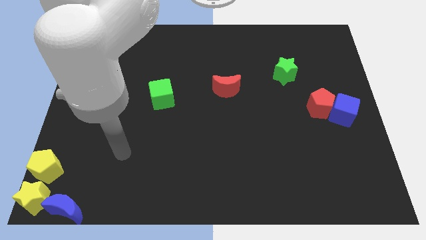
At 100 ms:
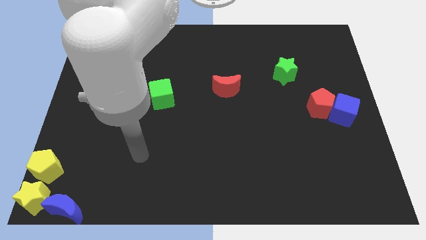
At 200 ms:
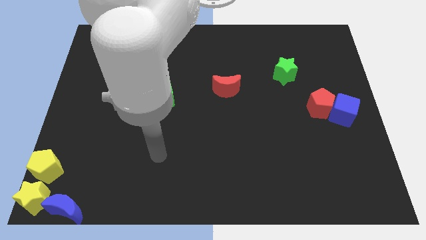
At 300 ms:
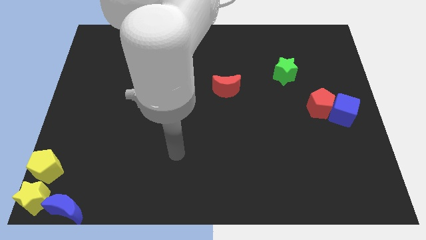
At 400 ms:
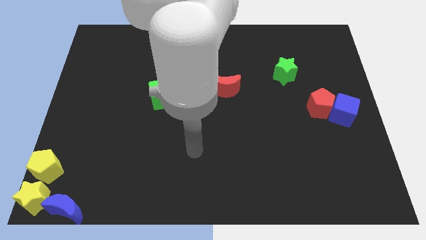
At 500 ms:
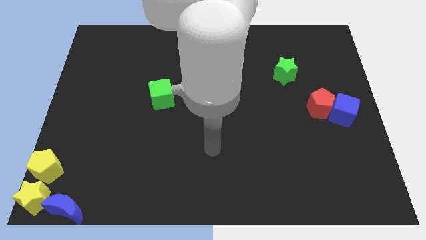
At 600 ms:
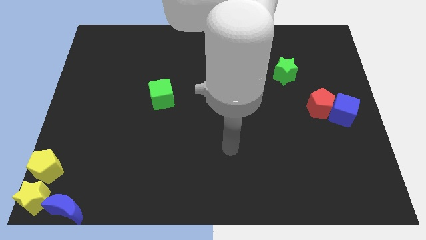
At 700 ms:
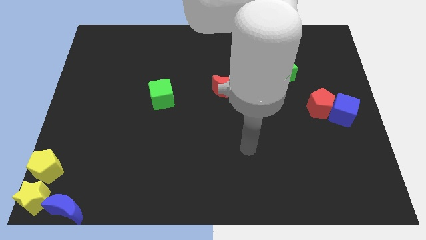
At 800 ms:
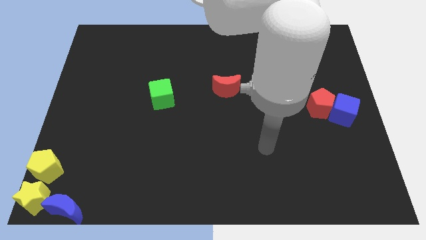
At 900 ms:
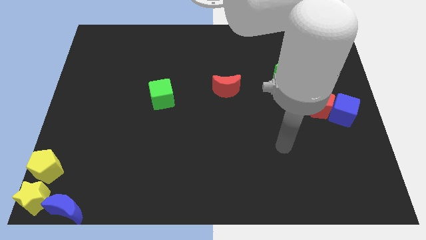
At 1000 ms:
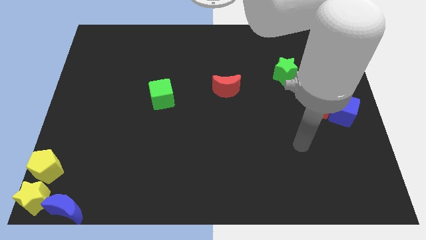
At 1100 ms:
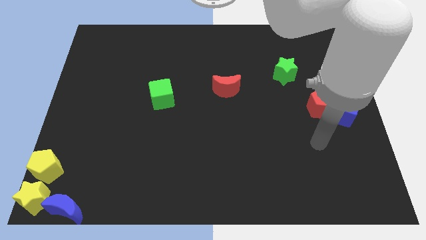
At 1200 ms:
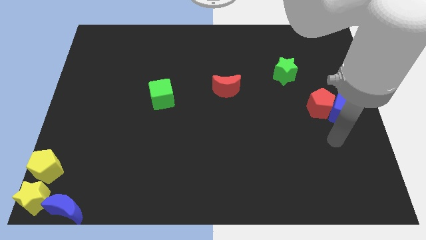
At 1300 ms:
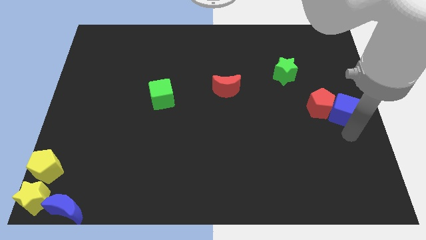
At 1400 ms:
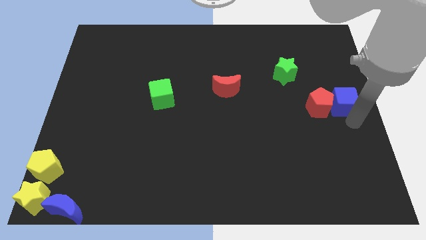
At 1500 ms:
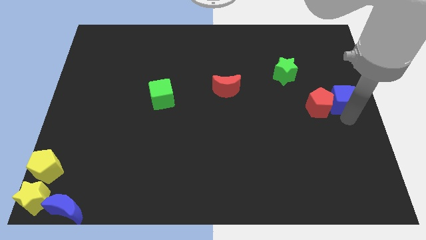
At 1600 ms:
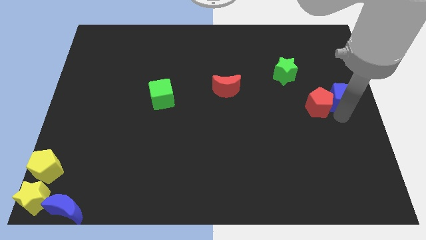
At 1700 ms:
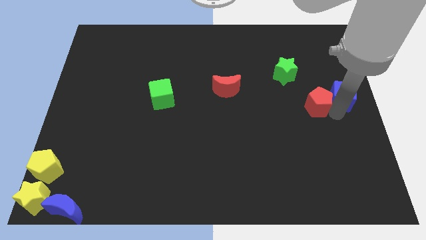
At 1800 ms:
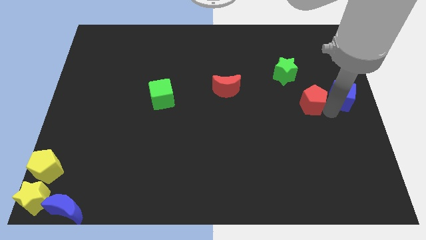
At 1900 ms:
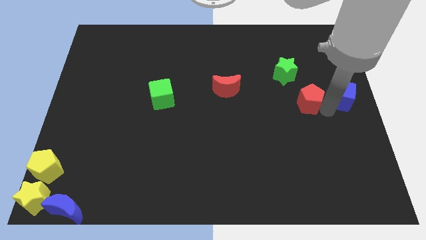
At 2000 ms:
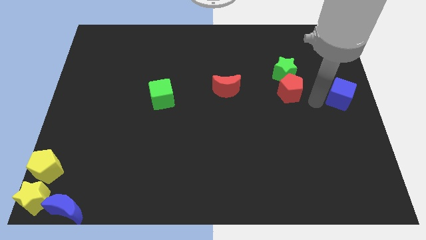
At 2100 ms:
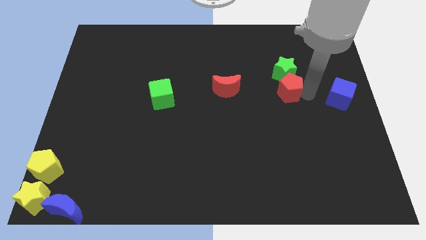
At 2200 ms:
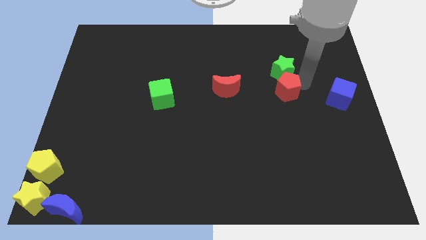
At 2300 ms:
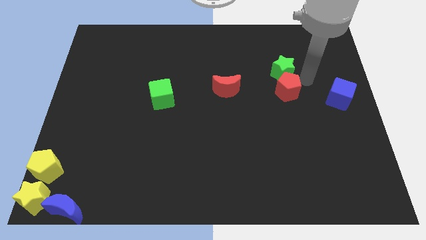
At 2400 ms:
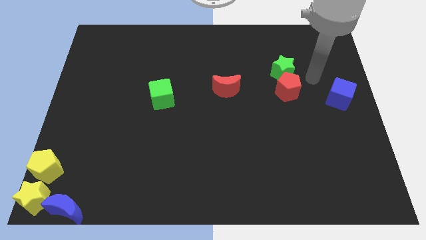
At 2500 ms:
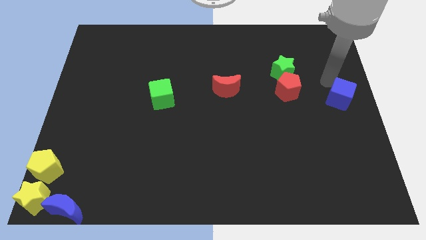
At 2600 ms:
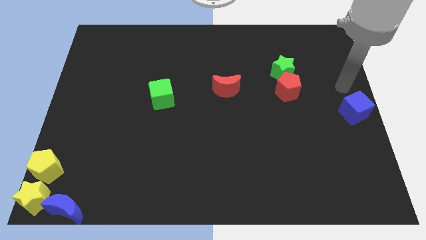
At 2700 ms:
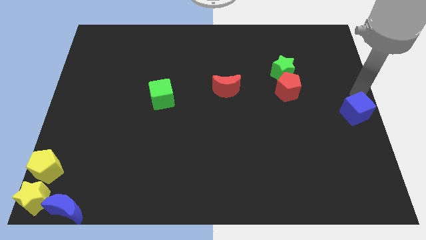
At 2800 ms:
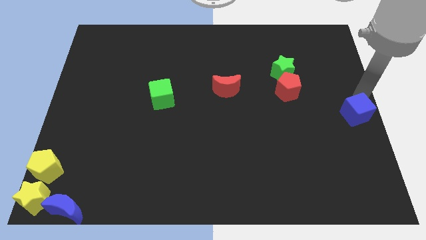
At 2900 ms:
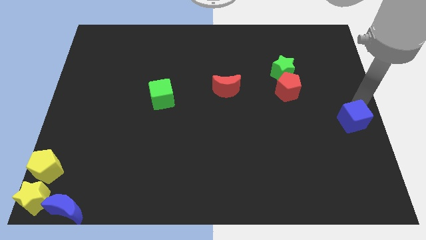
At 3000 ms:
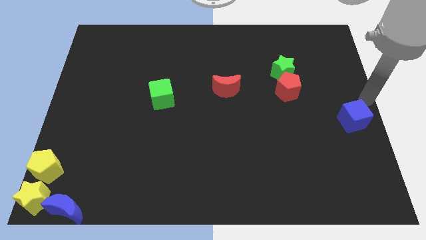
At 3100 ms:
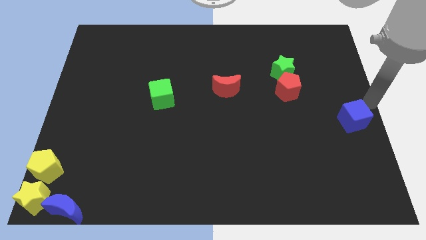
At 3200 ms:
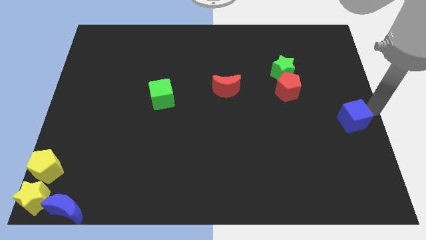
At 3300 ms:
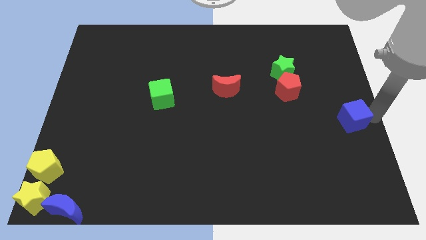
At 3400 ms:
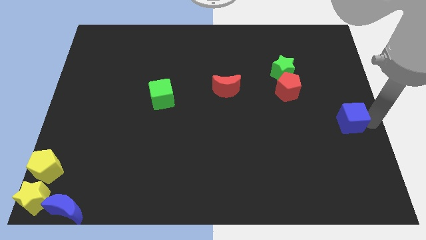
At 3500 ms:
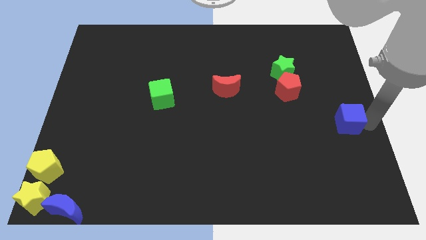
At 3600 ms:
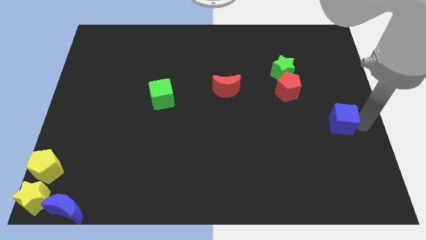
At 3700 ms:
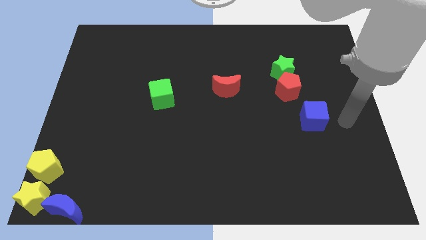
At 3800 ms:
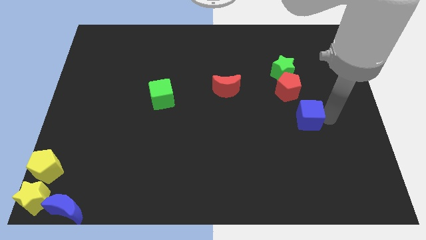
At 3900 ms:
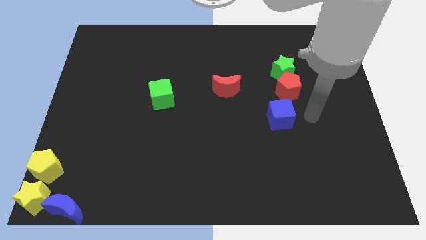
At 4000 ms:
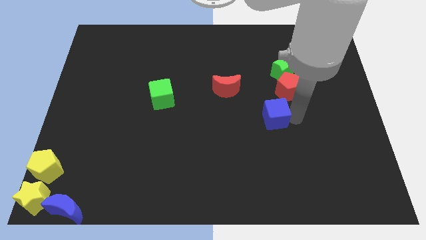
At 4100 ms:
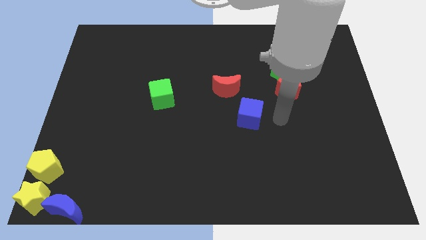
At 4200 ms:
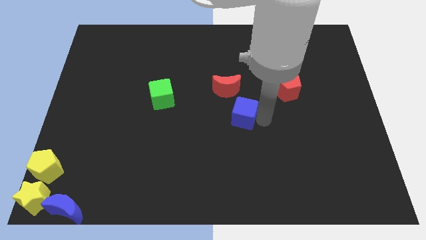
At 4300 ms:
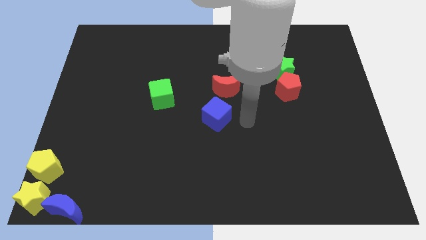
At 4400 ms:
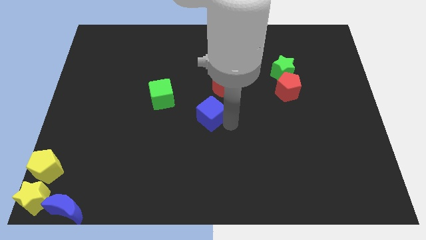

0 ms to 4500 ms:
drag the blue cube to the center

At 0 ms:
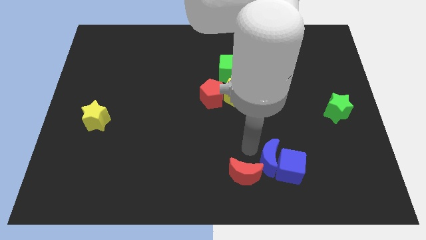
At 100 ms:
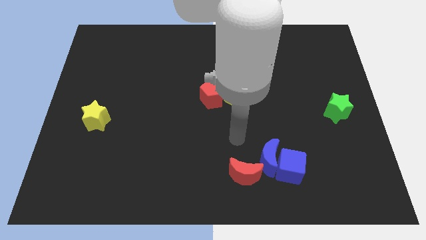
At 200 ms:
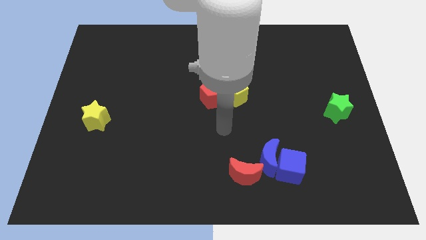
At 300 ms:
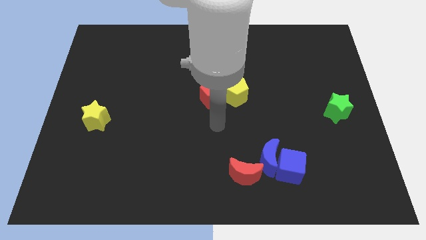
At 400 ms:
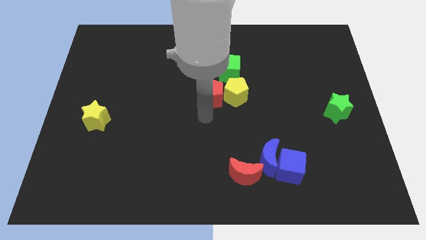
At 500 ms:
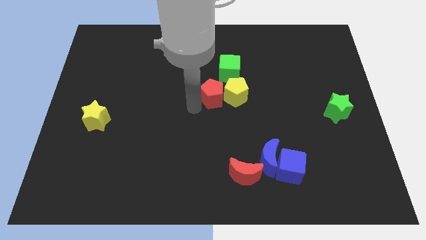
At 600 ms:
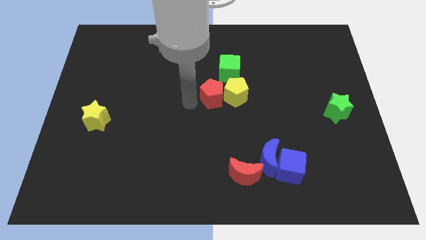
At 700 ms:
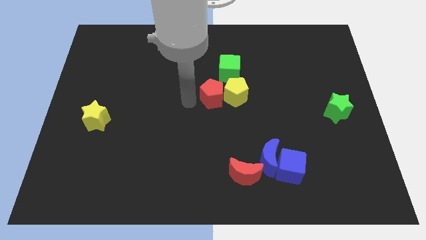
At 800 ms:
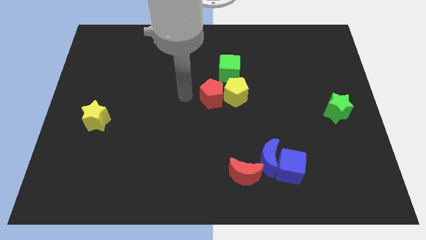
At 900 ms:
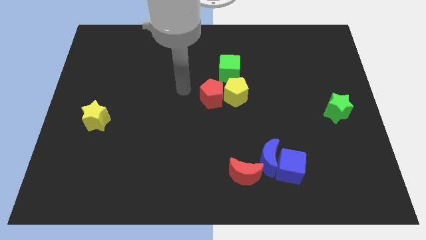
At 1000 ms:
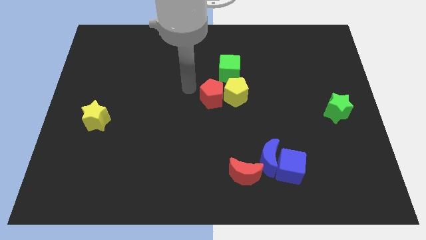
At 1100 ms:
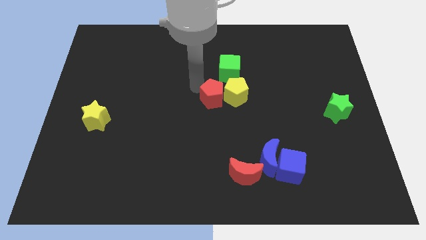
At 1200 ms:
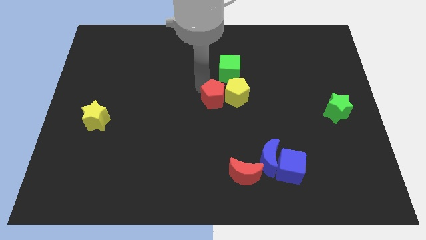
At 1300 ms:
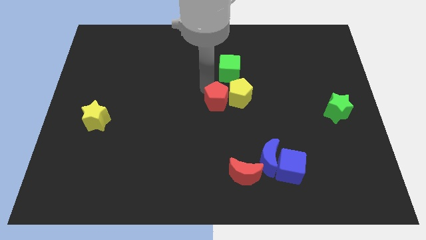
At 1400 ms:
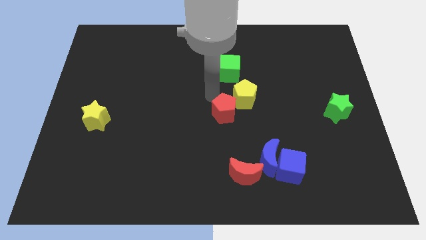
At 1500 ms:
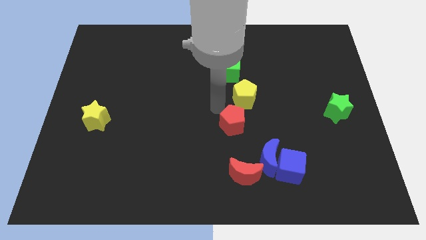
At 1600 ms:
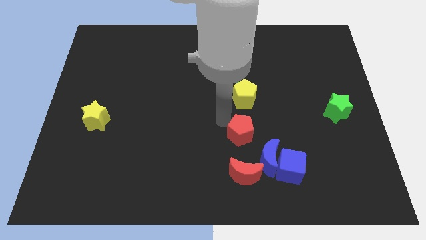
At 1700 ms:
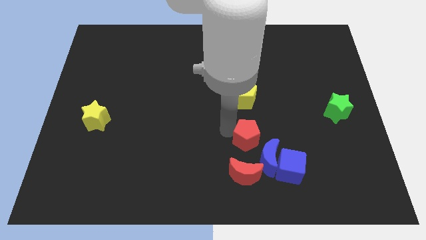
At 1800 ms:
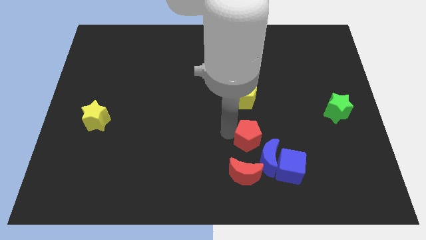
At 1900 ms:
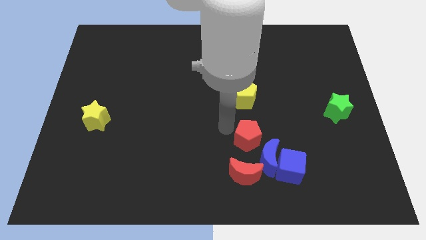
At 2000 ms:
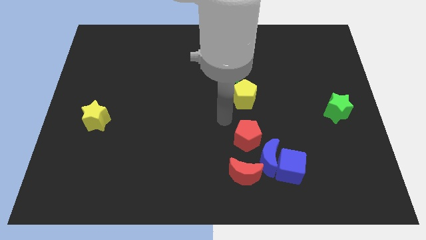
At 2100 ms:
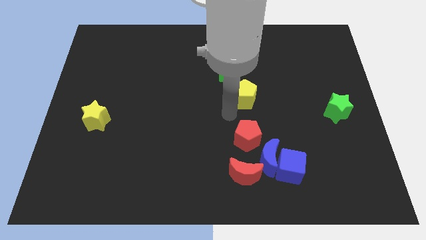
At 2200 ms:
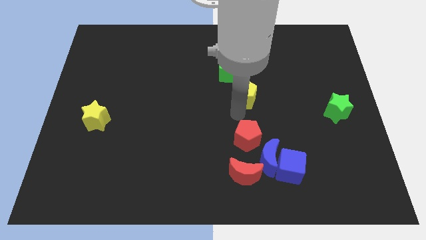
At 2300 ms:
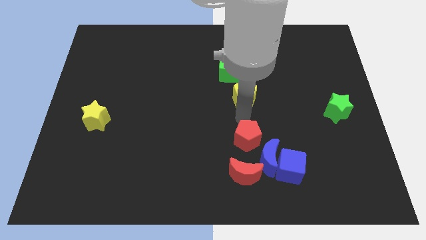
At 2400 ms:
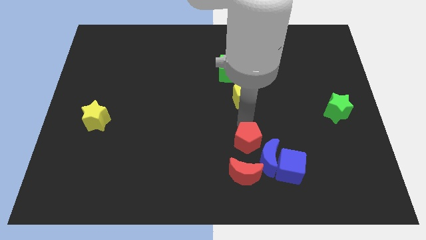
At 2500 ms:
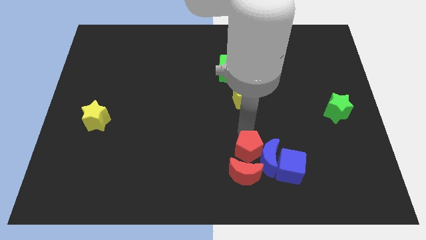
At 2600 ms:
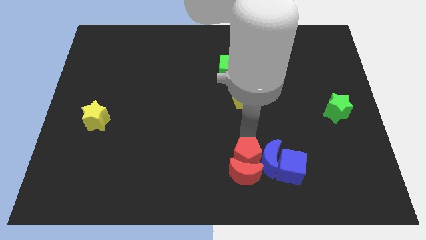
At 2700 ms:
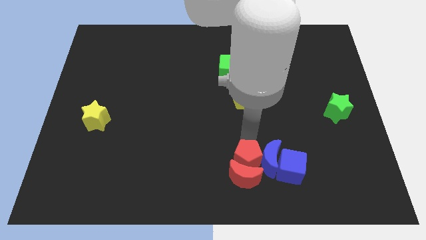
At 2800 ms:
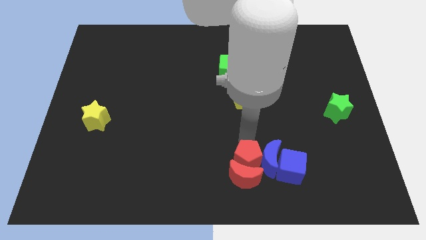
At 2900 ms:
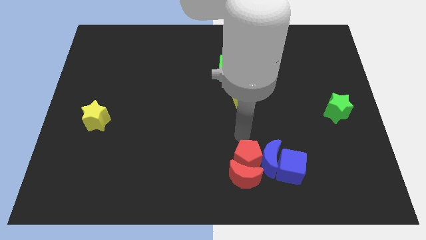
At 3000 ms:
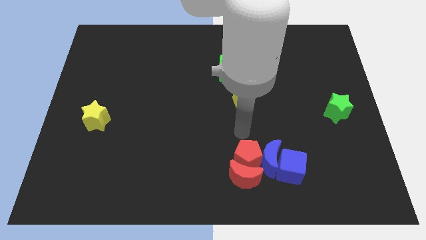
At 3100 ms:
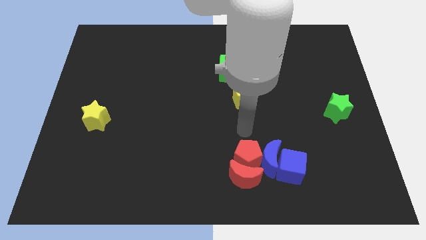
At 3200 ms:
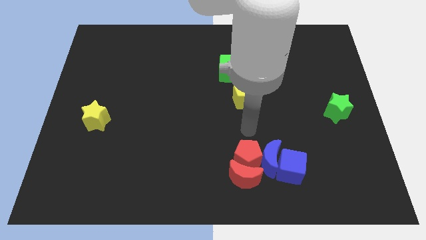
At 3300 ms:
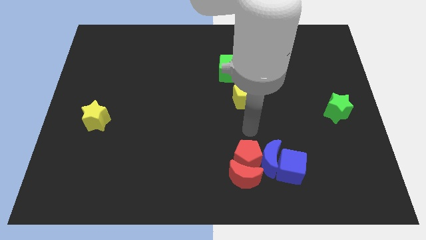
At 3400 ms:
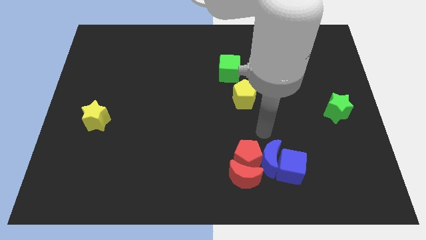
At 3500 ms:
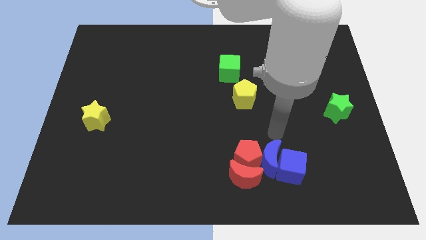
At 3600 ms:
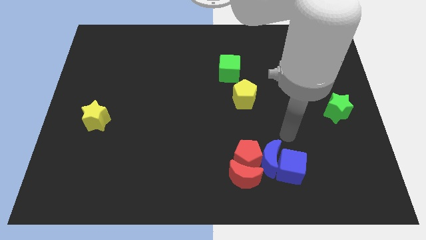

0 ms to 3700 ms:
push the red pentagon into the red crescent

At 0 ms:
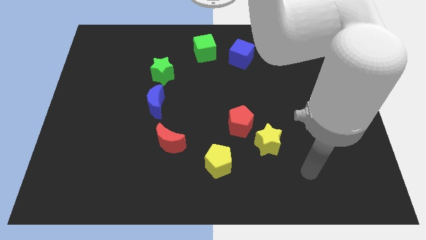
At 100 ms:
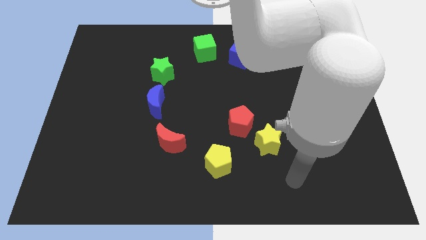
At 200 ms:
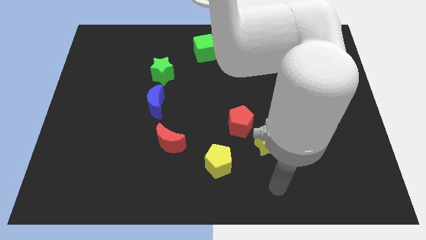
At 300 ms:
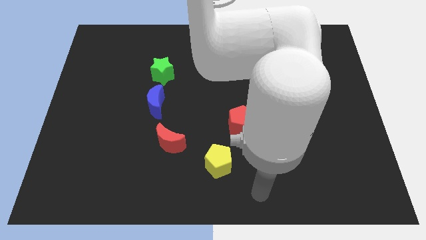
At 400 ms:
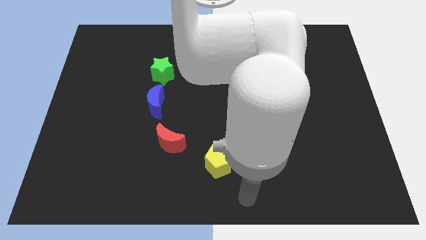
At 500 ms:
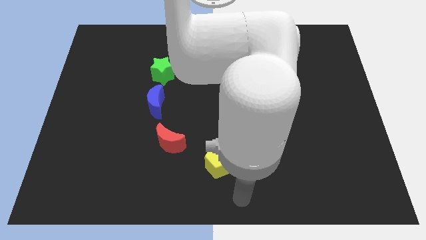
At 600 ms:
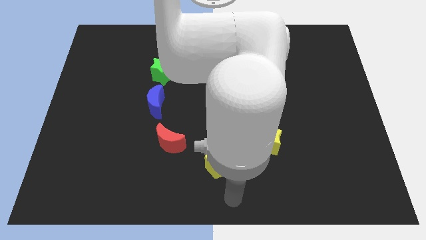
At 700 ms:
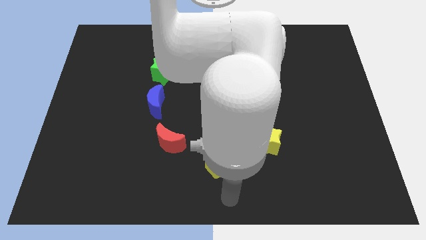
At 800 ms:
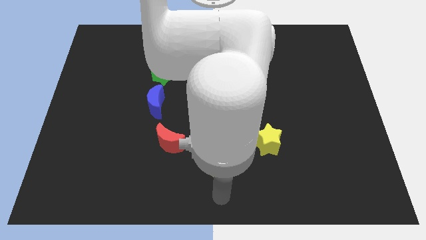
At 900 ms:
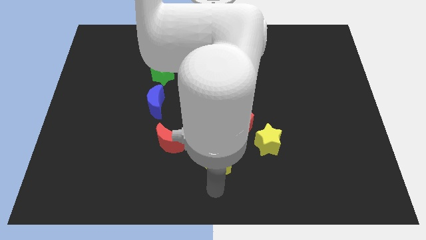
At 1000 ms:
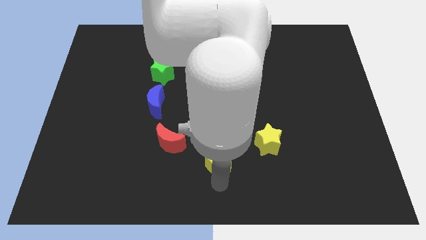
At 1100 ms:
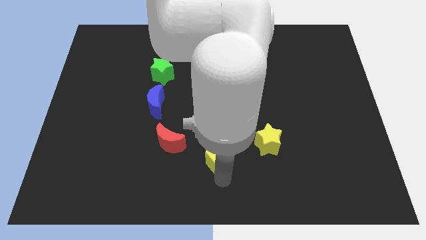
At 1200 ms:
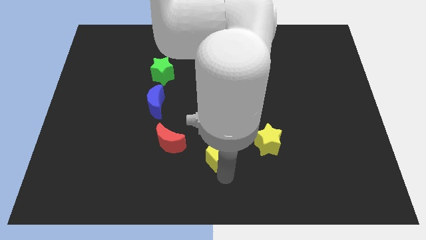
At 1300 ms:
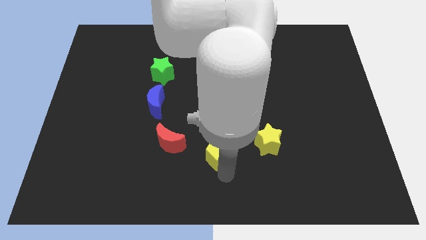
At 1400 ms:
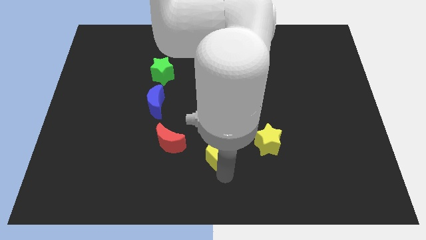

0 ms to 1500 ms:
touch the bottom side of the yellow pentagon
